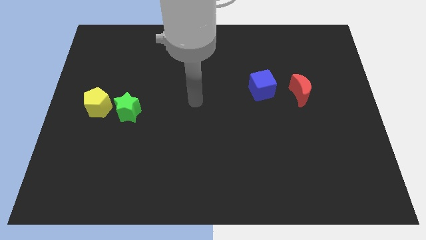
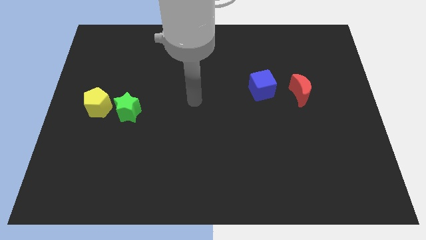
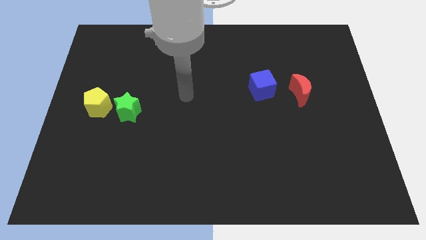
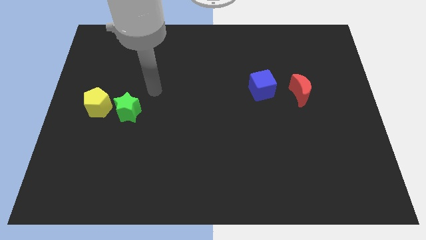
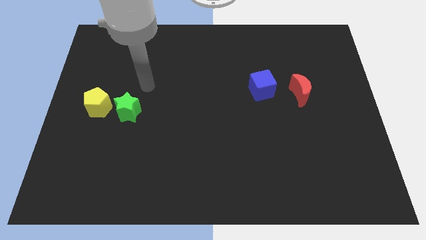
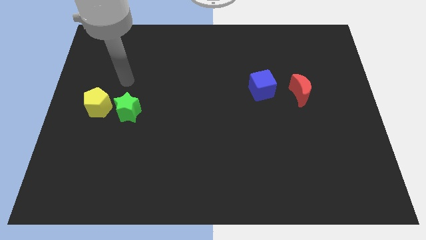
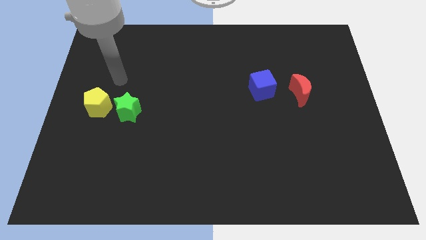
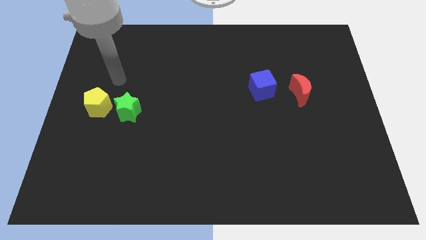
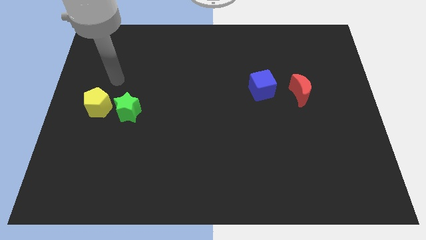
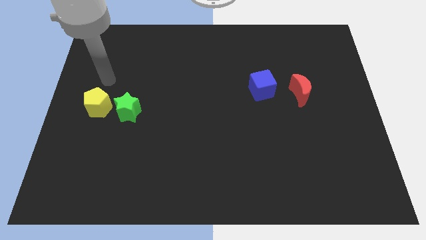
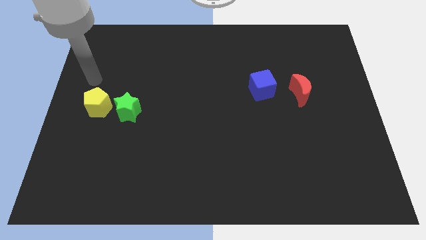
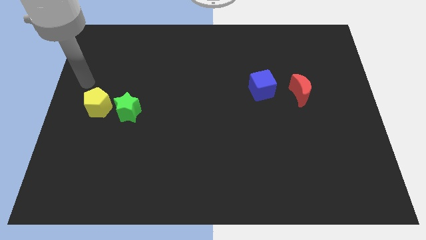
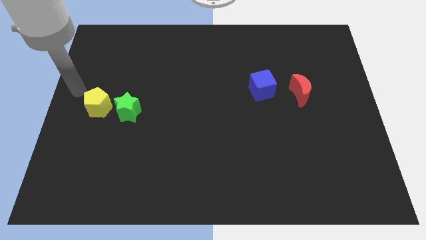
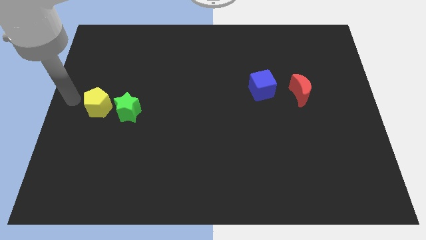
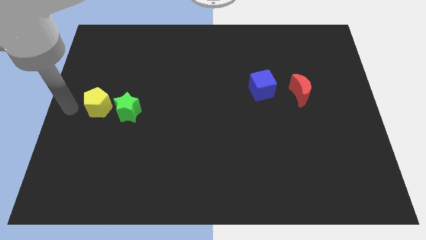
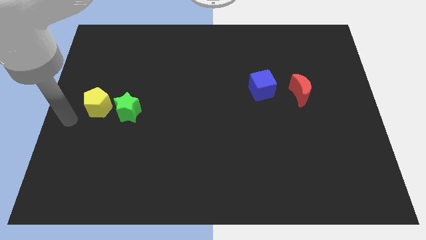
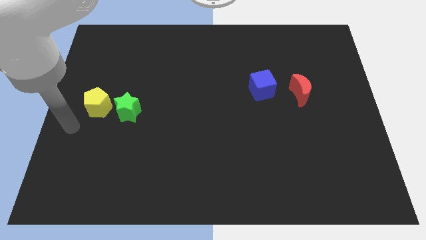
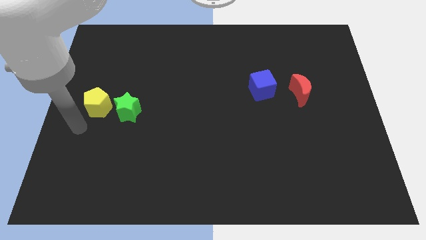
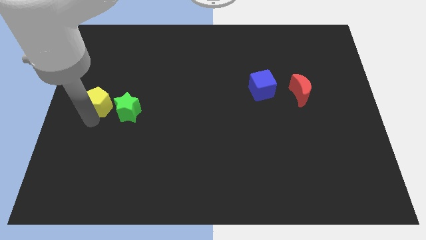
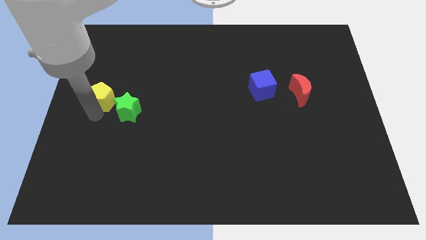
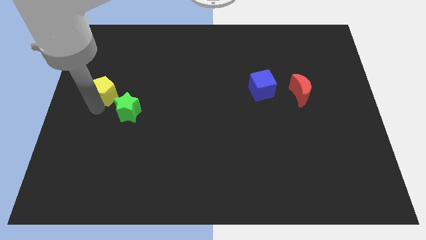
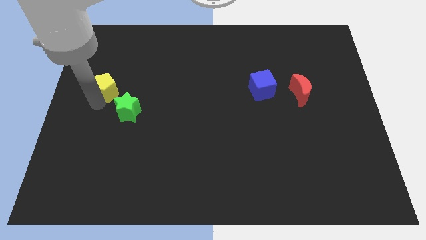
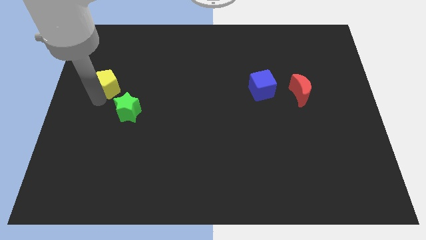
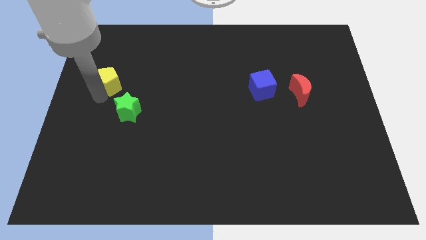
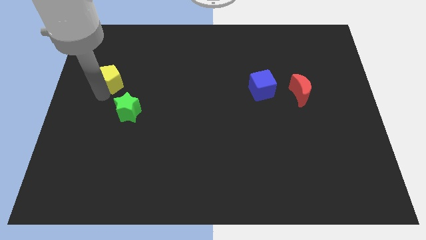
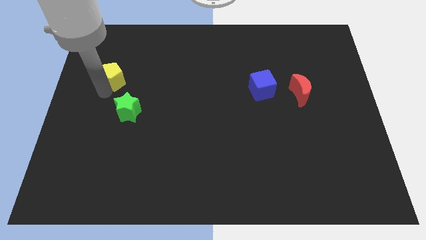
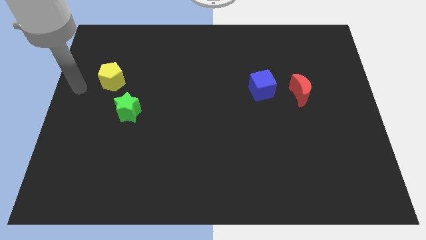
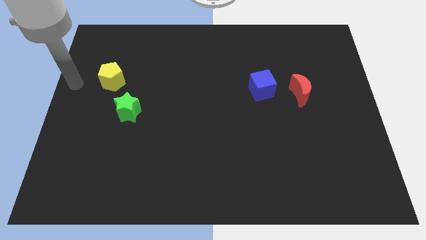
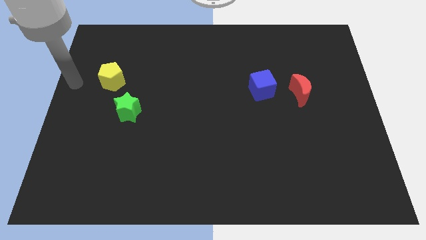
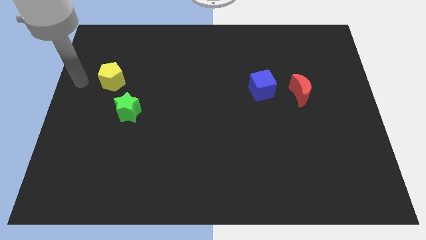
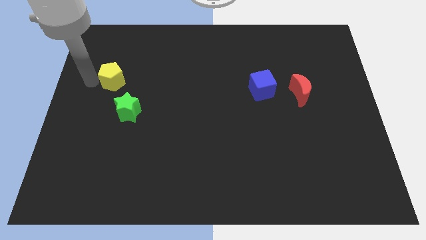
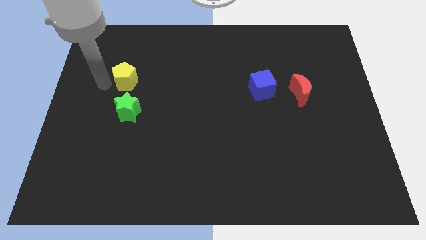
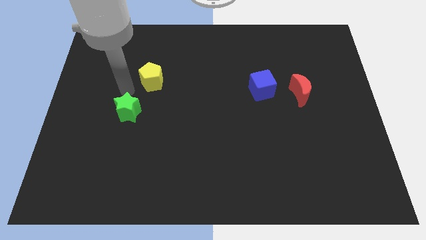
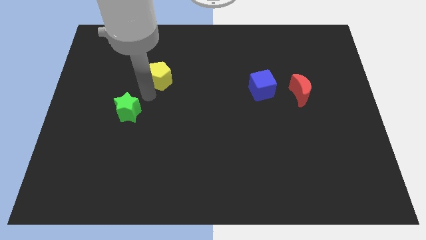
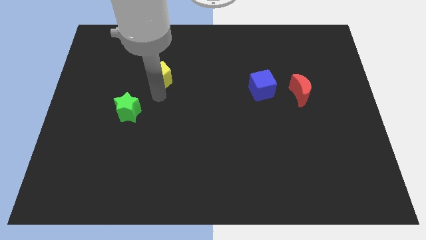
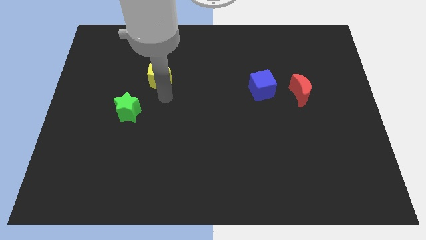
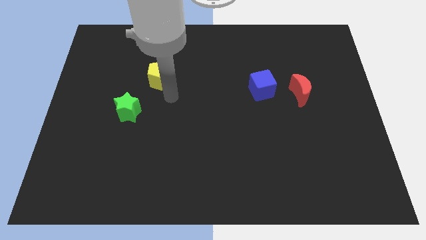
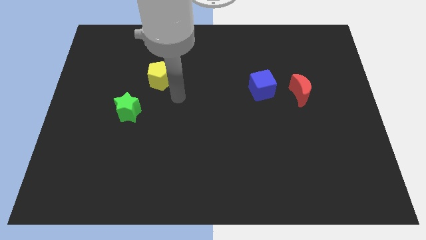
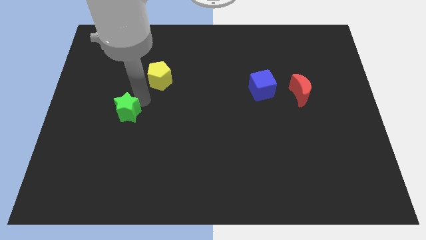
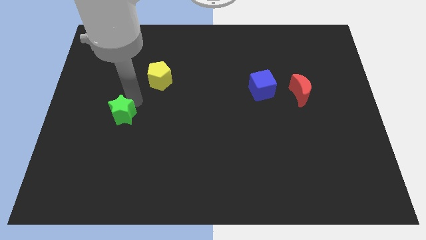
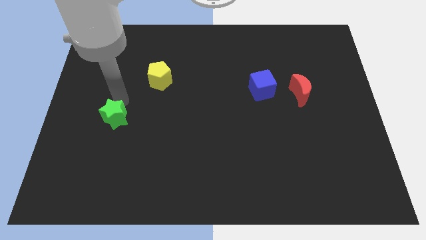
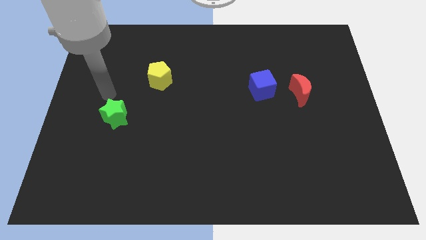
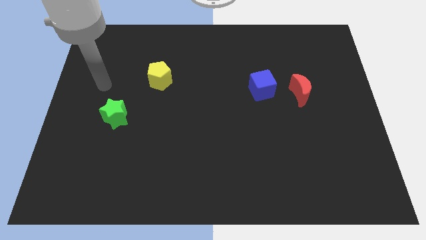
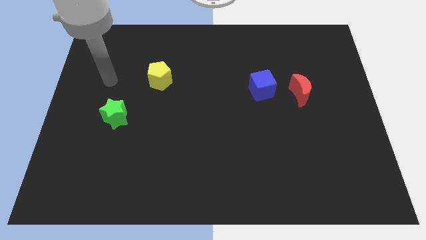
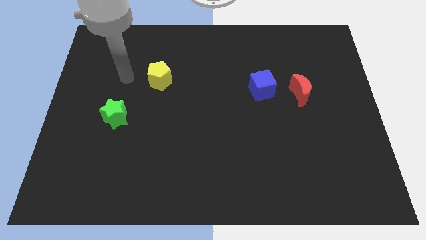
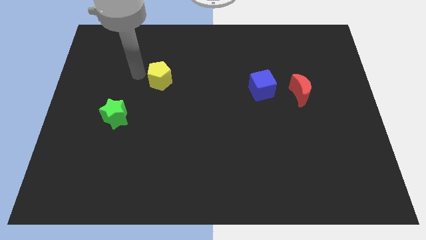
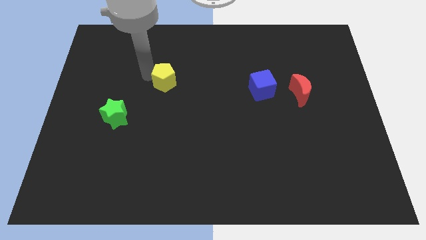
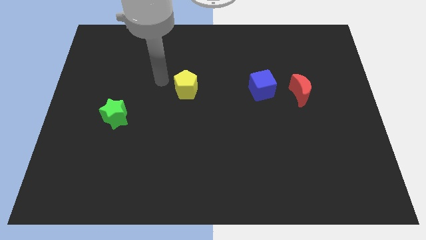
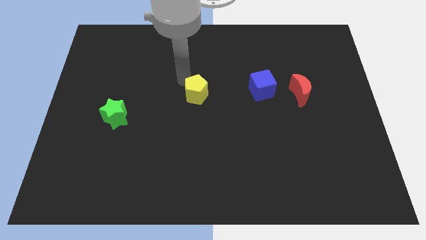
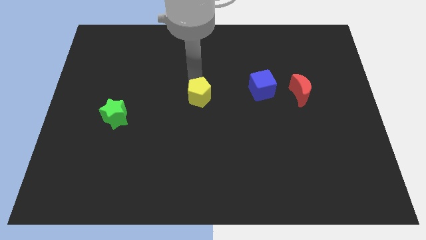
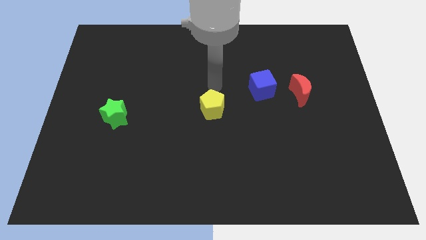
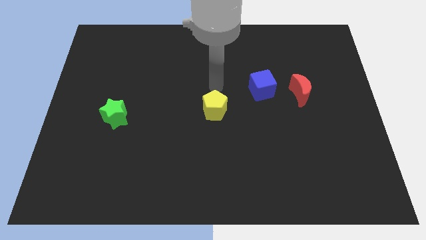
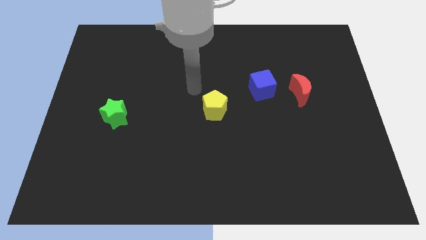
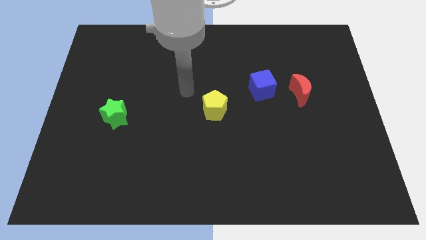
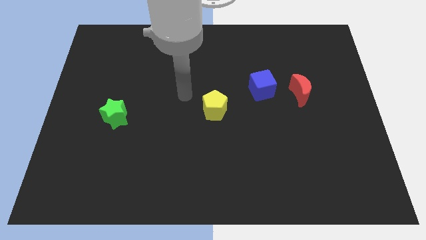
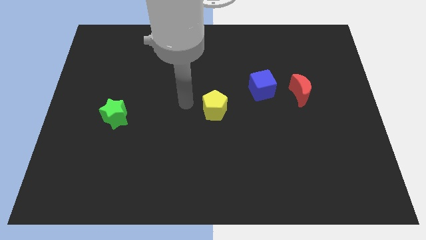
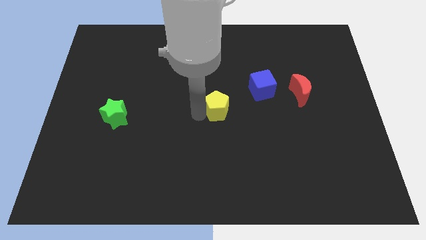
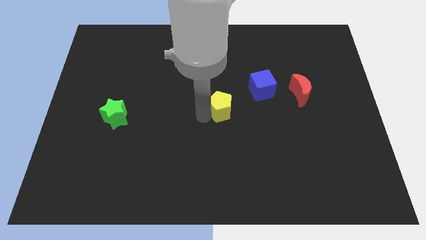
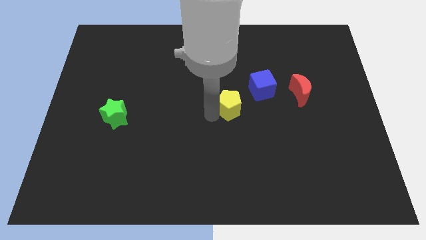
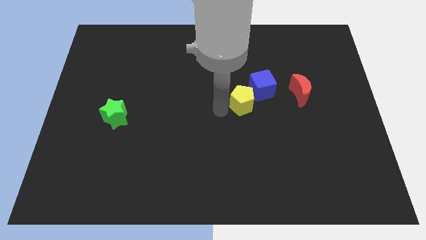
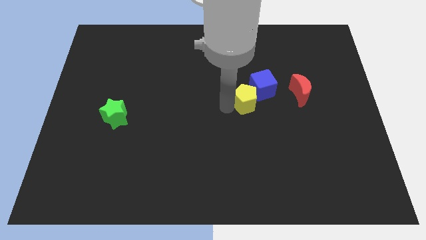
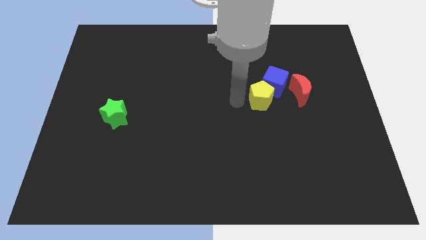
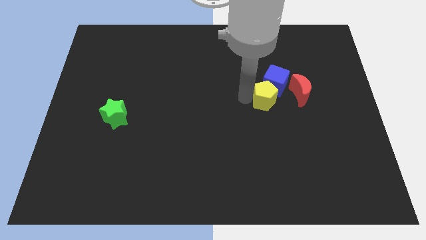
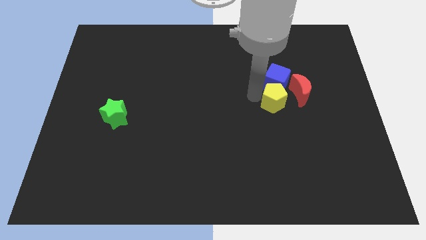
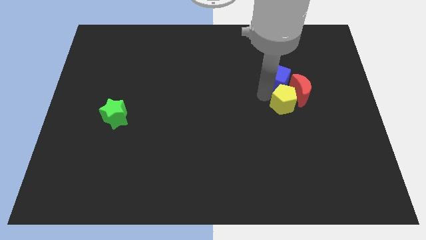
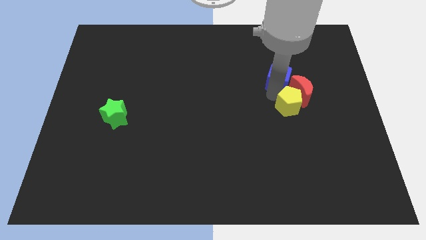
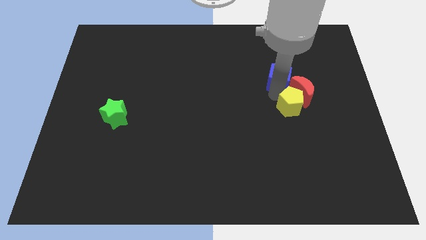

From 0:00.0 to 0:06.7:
slide the yellow block towards the red moon

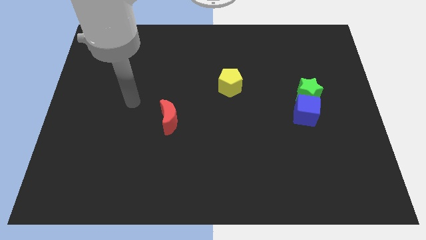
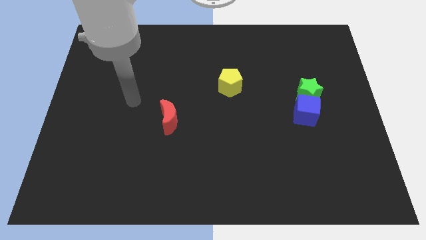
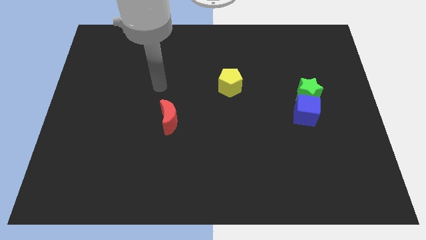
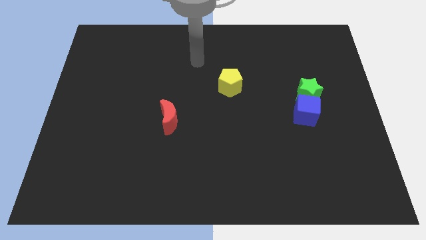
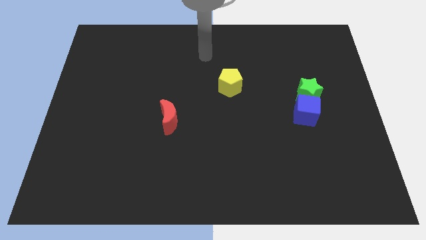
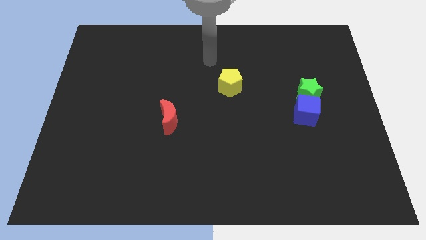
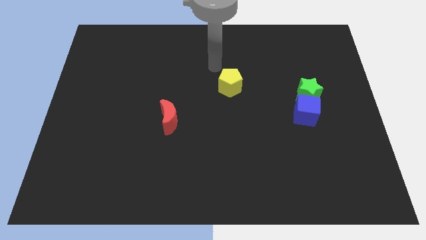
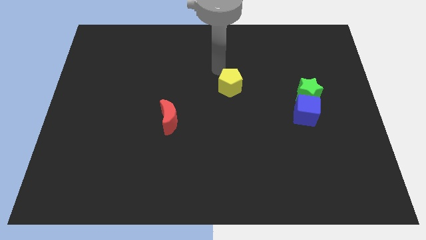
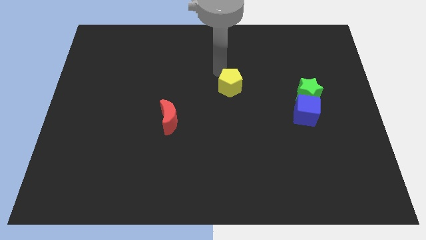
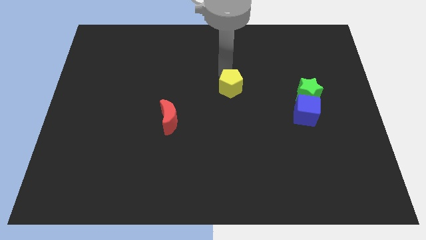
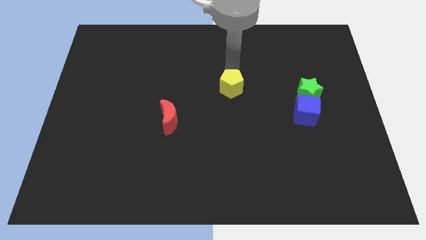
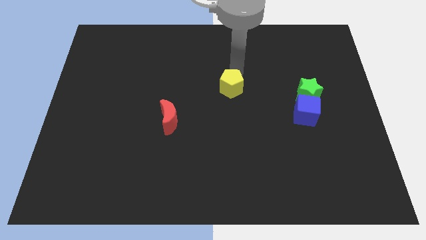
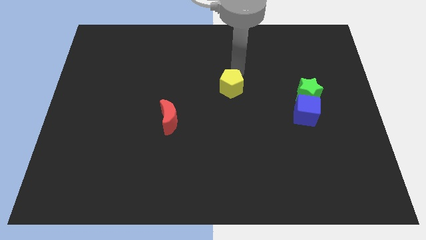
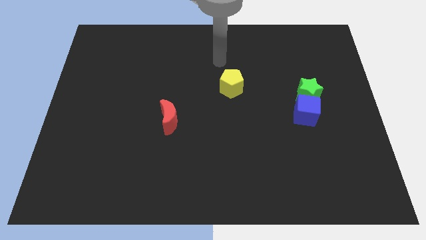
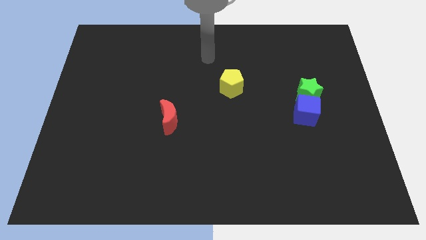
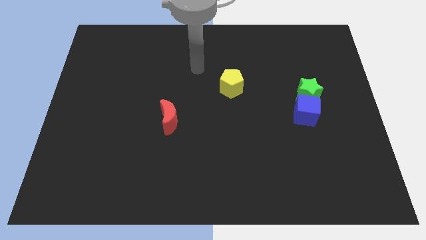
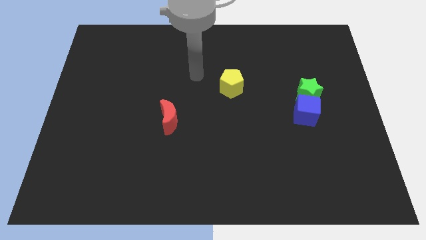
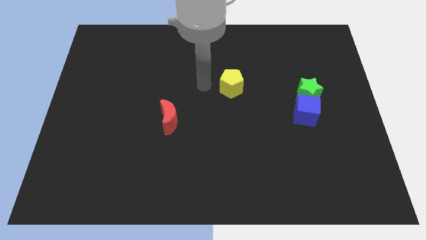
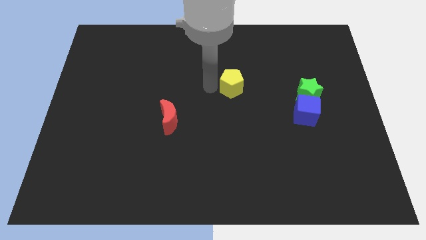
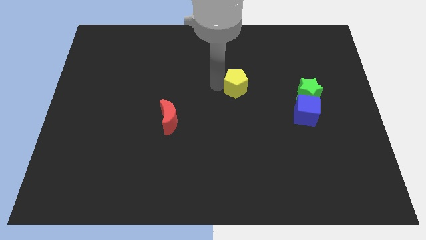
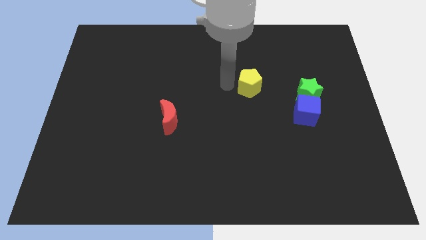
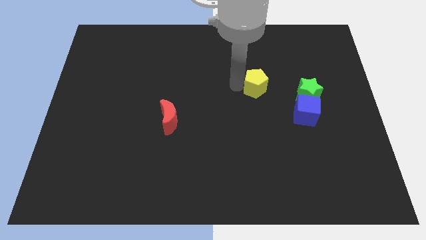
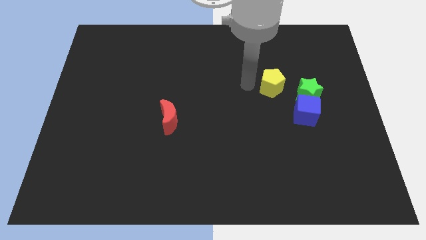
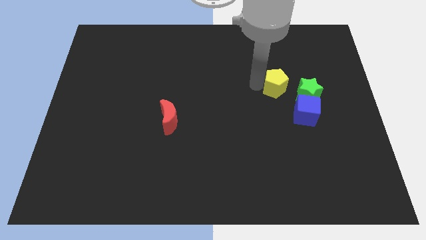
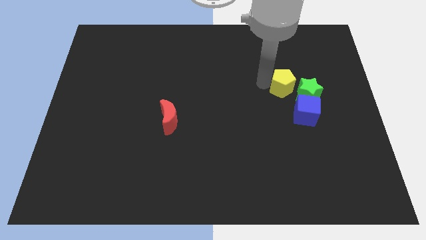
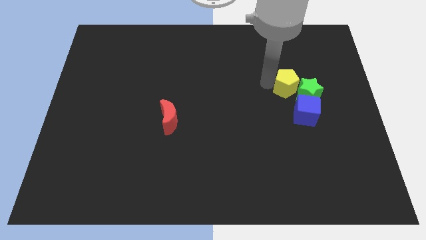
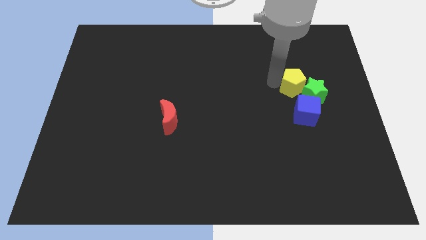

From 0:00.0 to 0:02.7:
move the yellow pentagon close to the green star
